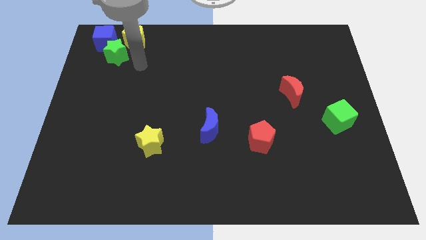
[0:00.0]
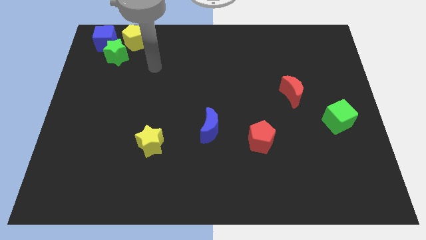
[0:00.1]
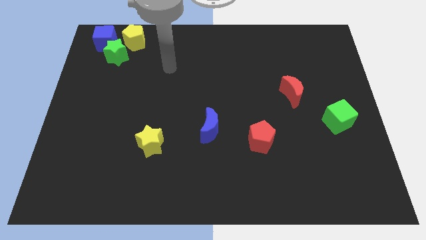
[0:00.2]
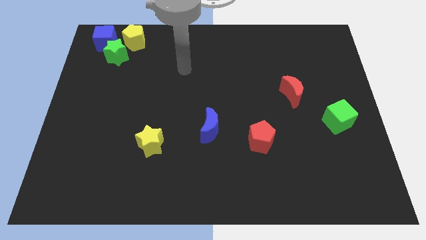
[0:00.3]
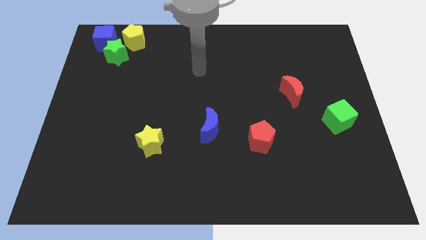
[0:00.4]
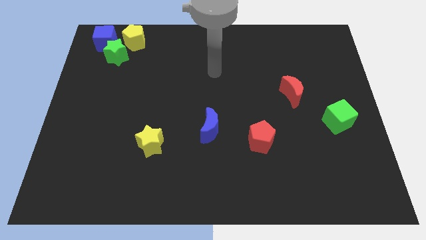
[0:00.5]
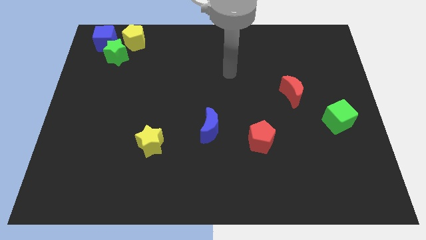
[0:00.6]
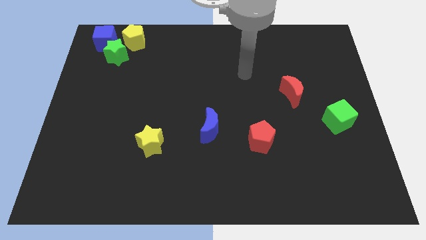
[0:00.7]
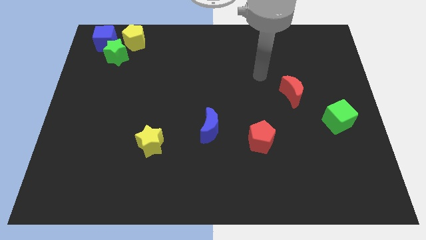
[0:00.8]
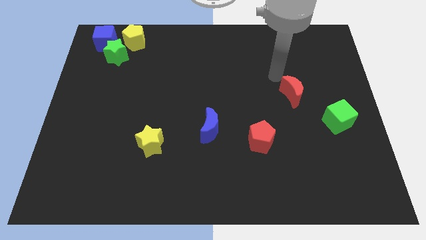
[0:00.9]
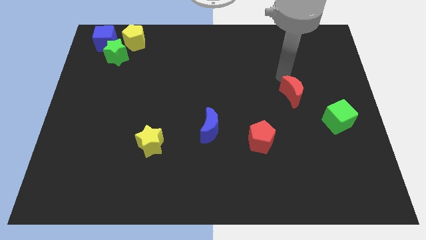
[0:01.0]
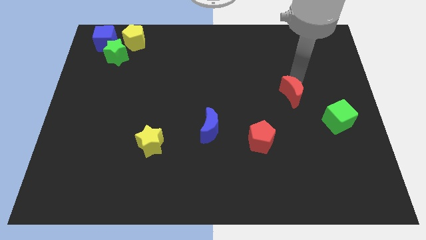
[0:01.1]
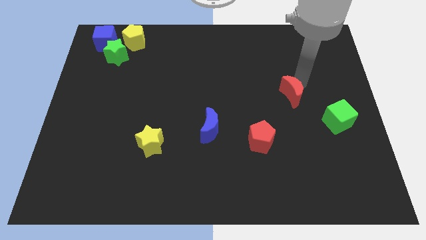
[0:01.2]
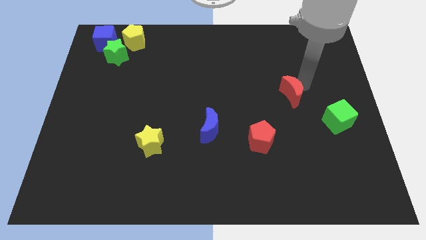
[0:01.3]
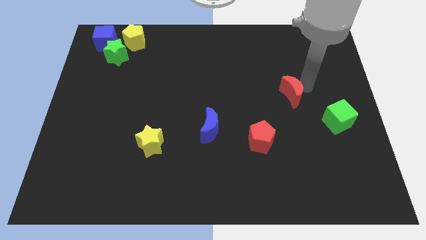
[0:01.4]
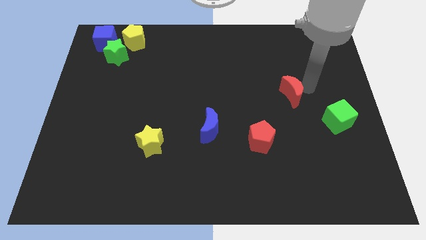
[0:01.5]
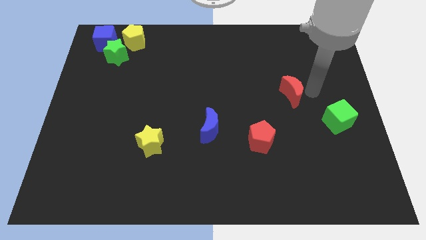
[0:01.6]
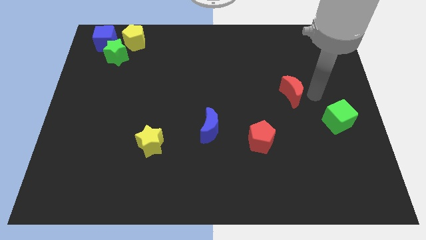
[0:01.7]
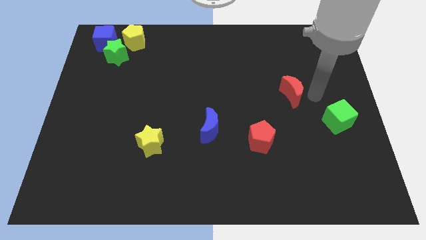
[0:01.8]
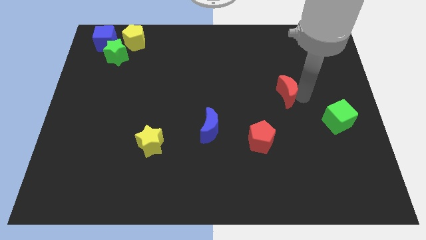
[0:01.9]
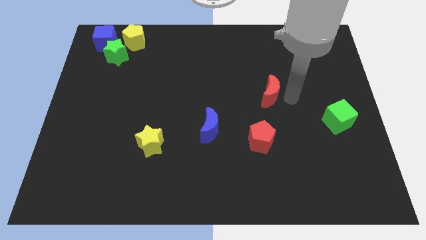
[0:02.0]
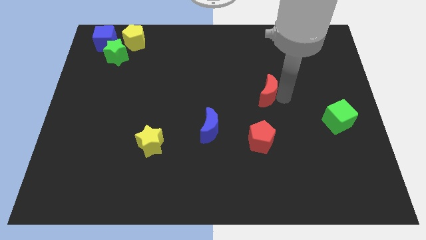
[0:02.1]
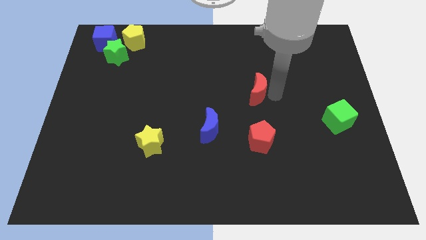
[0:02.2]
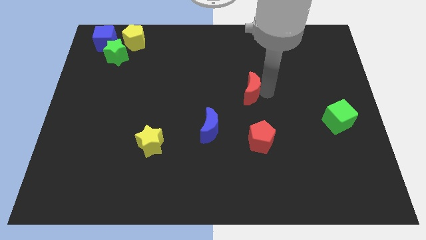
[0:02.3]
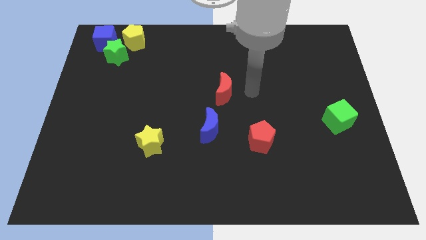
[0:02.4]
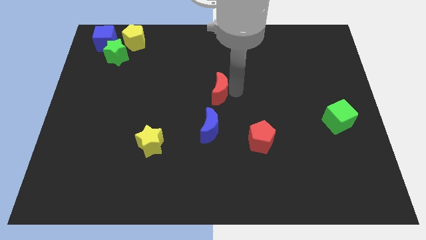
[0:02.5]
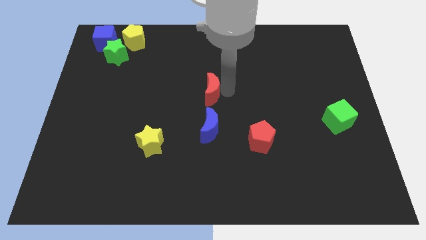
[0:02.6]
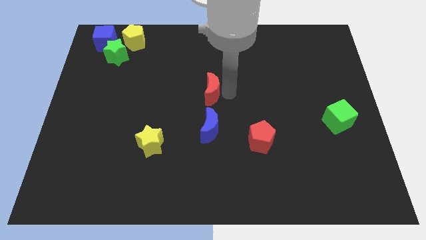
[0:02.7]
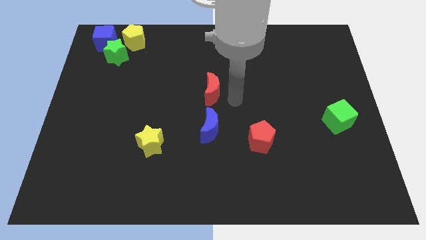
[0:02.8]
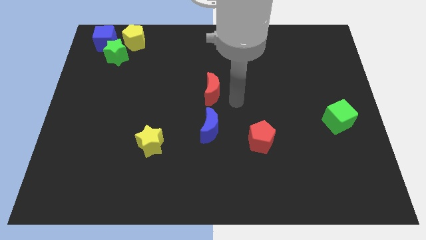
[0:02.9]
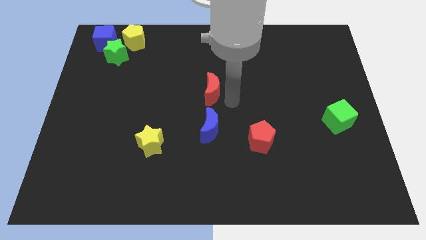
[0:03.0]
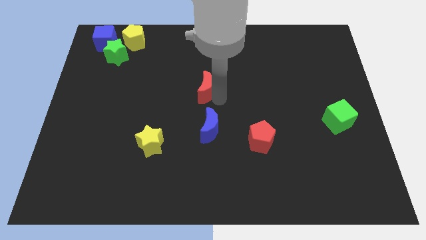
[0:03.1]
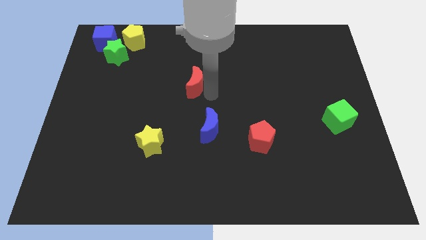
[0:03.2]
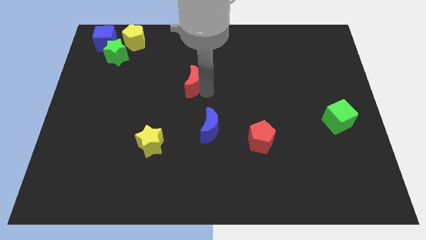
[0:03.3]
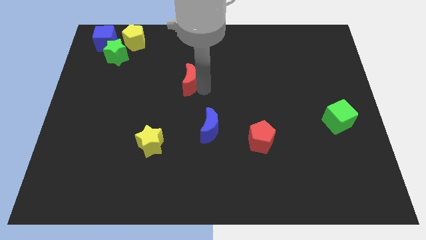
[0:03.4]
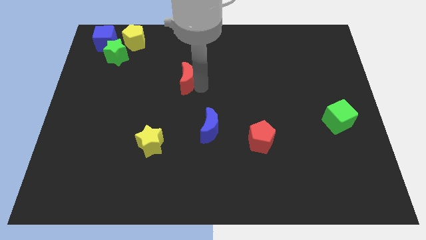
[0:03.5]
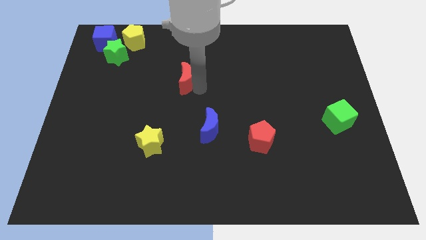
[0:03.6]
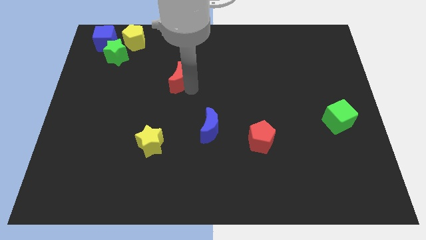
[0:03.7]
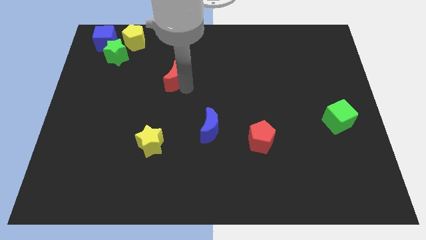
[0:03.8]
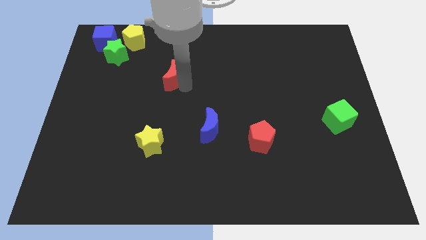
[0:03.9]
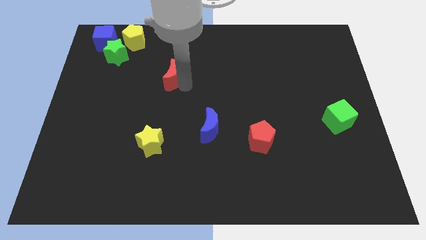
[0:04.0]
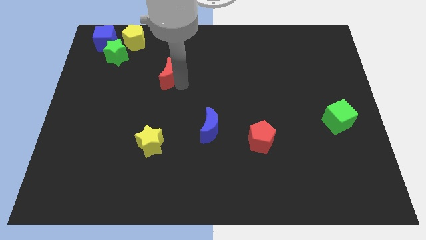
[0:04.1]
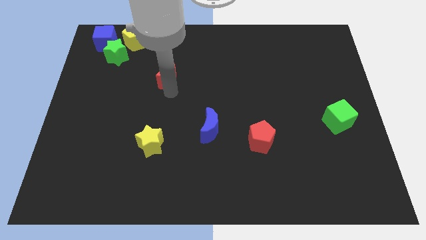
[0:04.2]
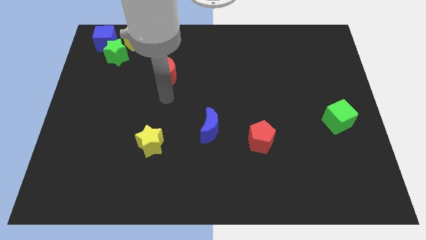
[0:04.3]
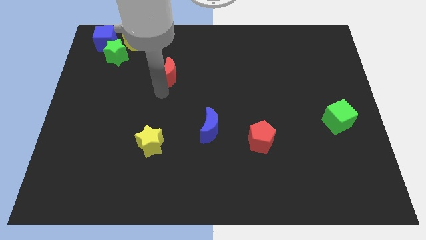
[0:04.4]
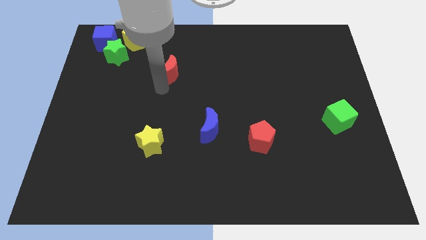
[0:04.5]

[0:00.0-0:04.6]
place the red moon vertically above the yellow star

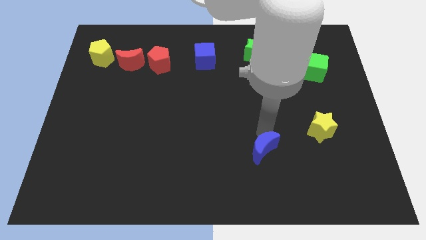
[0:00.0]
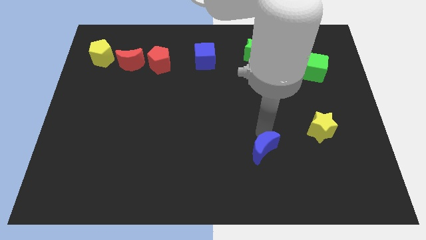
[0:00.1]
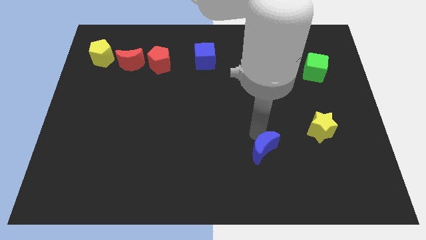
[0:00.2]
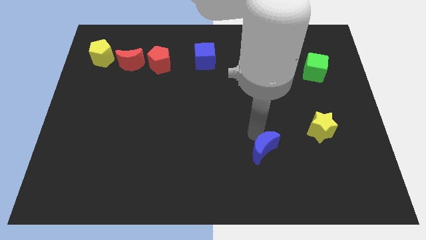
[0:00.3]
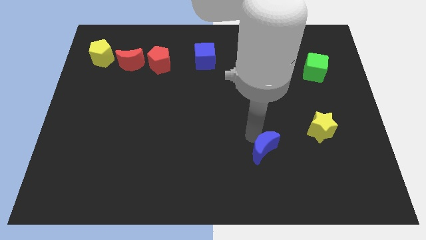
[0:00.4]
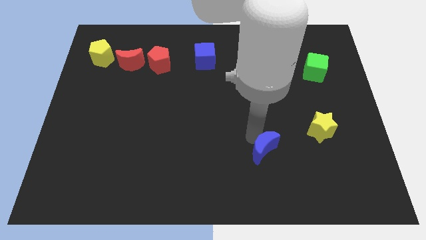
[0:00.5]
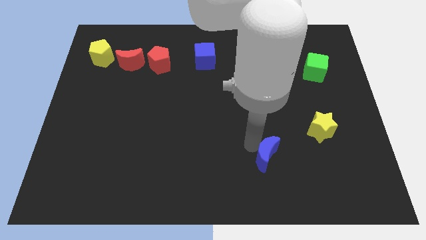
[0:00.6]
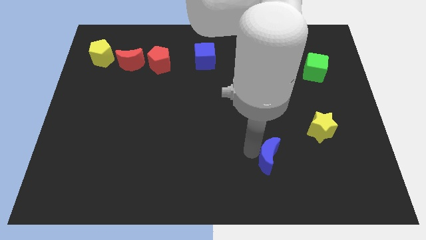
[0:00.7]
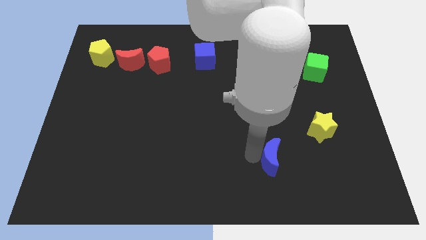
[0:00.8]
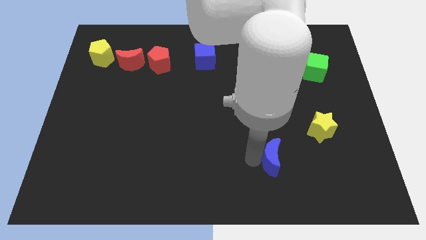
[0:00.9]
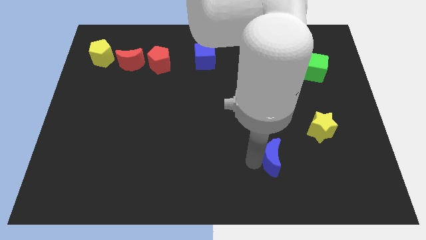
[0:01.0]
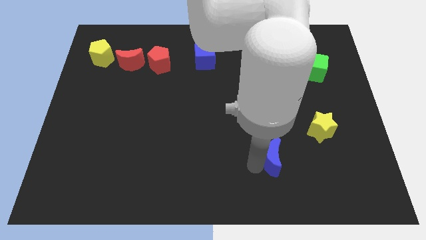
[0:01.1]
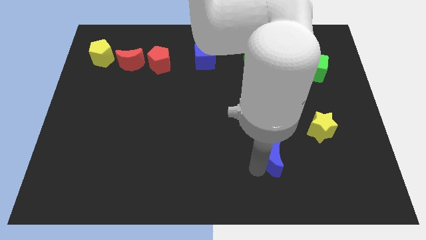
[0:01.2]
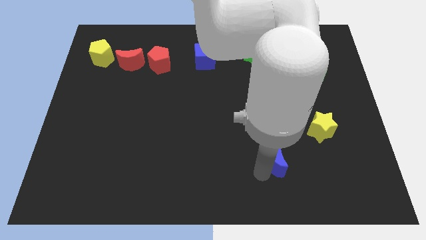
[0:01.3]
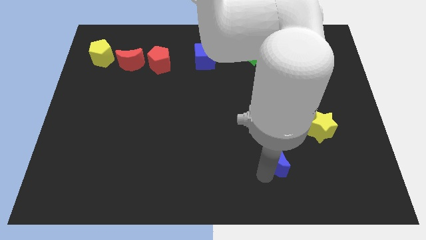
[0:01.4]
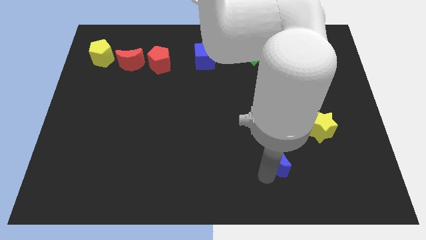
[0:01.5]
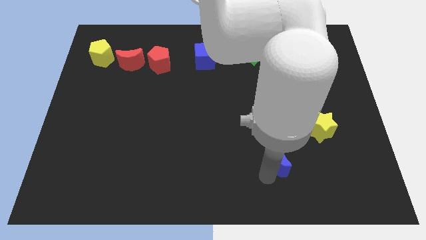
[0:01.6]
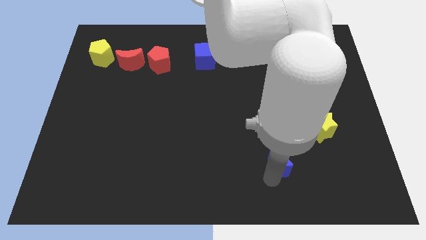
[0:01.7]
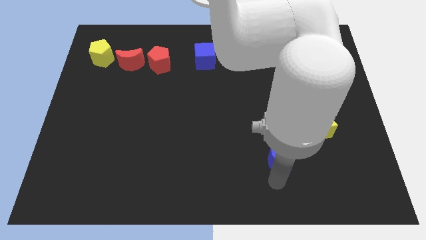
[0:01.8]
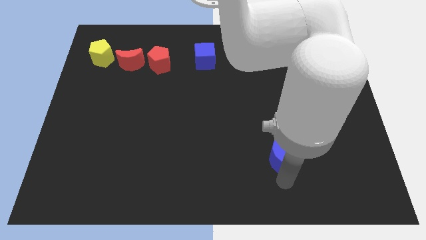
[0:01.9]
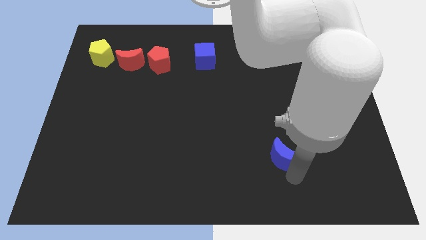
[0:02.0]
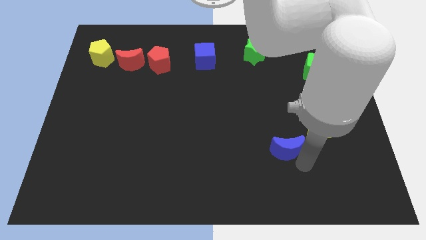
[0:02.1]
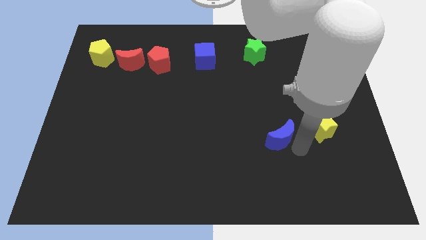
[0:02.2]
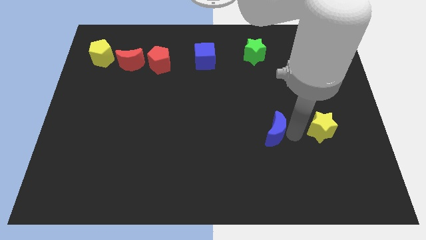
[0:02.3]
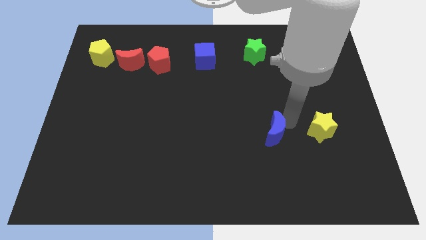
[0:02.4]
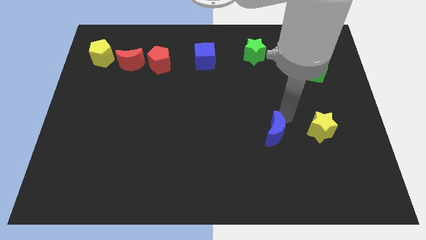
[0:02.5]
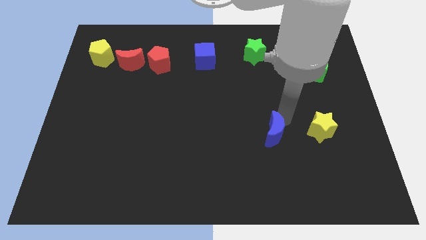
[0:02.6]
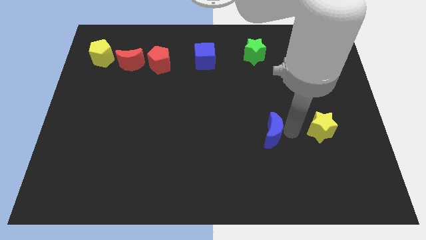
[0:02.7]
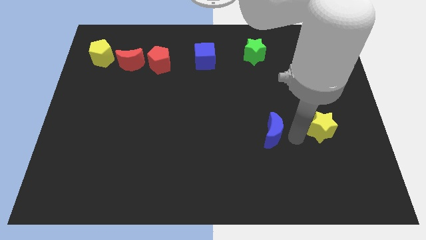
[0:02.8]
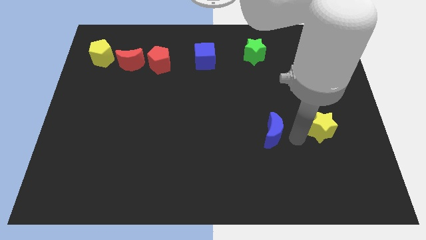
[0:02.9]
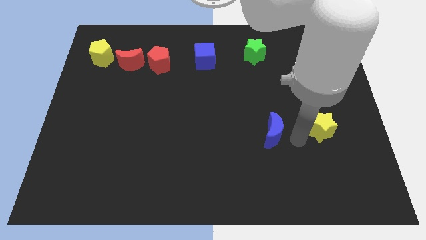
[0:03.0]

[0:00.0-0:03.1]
move the blue crescent to the left of the yellow star

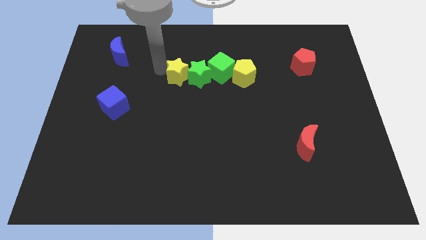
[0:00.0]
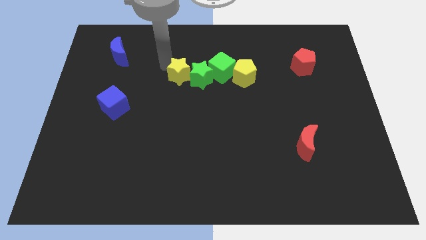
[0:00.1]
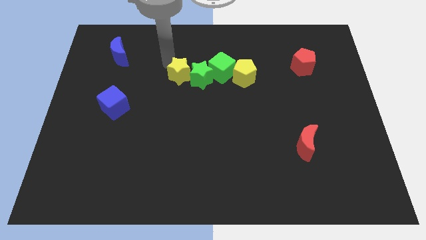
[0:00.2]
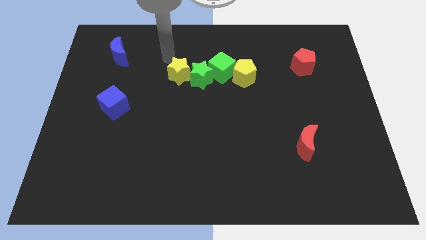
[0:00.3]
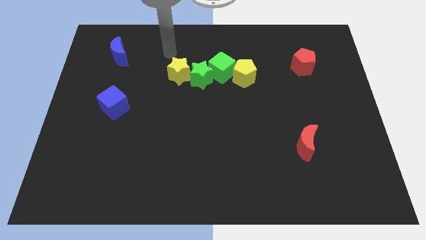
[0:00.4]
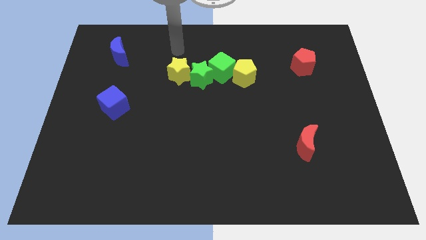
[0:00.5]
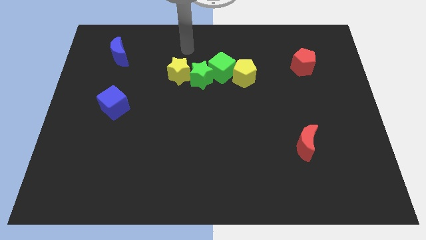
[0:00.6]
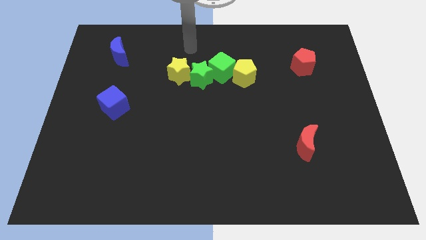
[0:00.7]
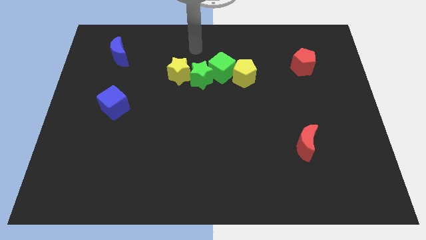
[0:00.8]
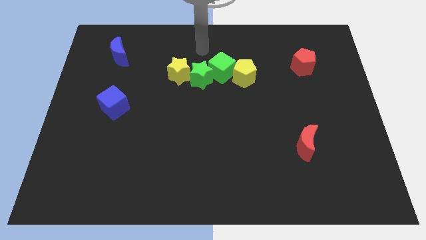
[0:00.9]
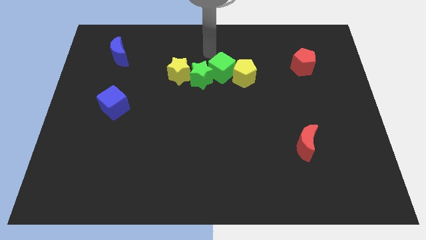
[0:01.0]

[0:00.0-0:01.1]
move your arm away from the yellow star

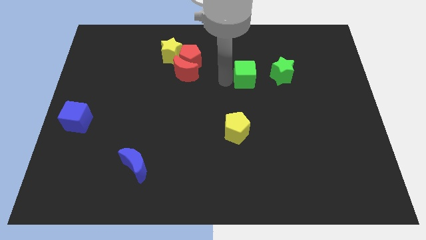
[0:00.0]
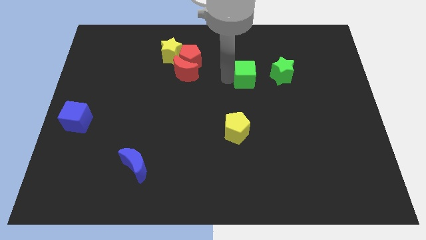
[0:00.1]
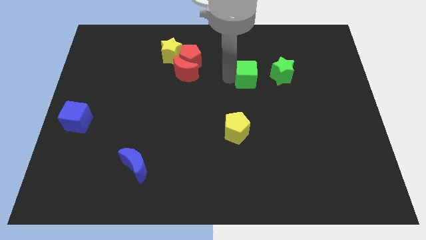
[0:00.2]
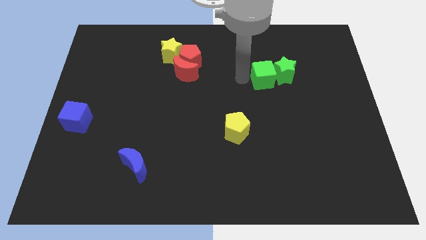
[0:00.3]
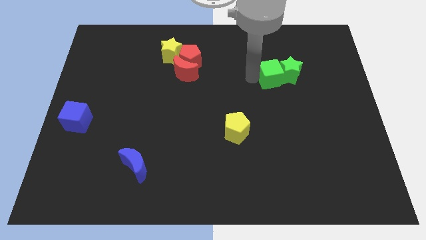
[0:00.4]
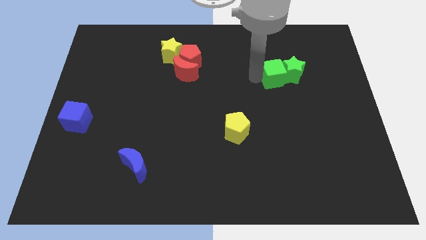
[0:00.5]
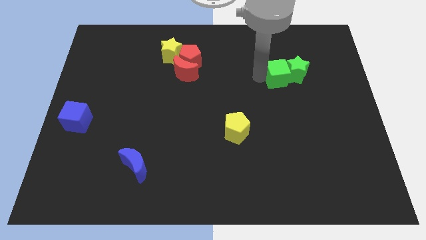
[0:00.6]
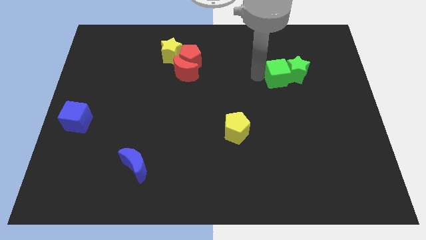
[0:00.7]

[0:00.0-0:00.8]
push the green cube into the green star
